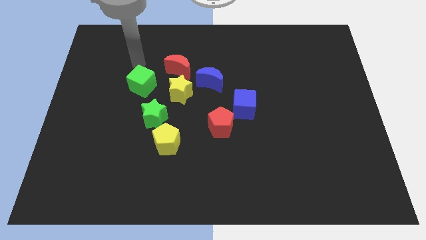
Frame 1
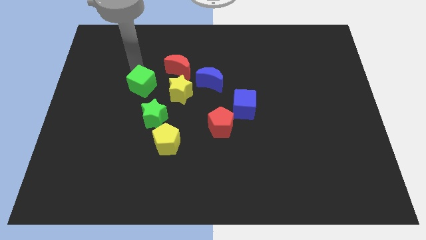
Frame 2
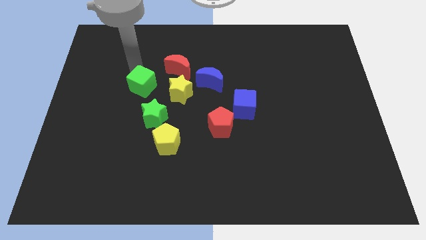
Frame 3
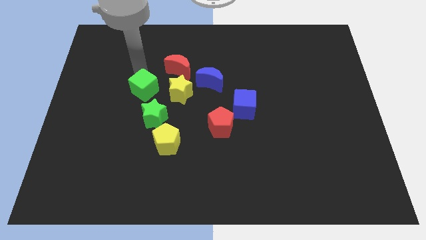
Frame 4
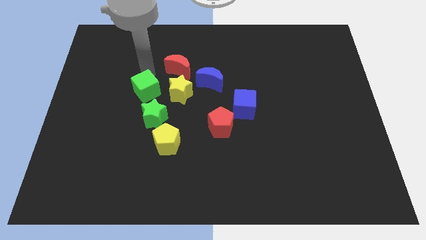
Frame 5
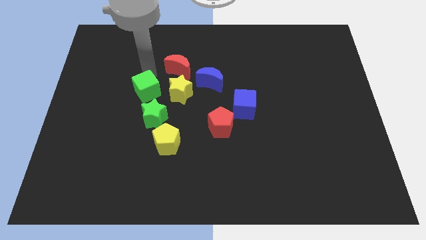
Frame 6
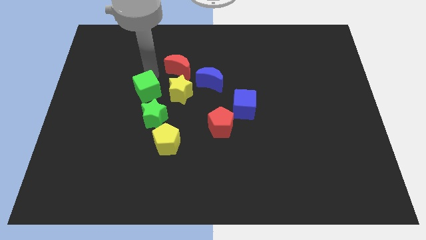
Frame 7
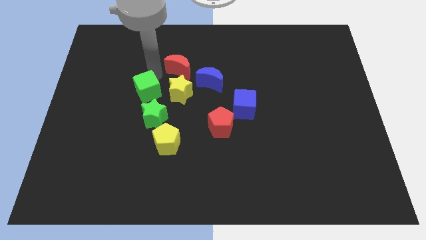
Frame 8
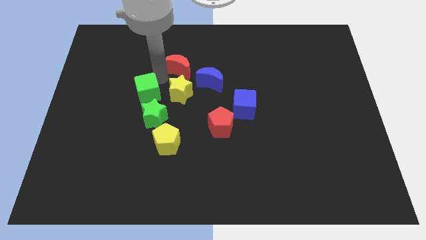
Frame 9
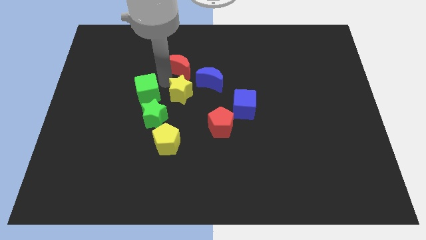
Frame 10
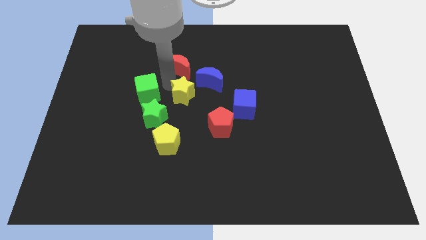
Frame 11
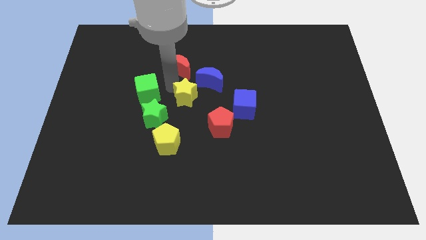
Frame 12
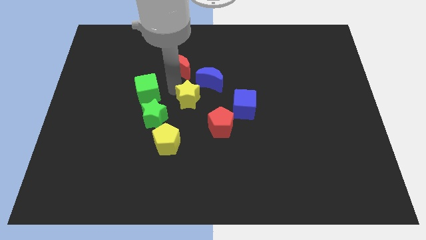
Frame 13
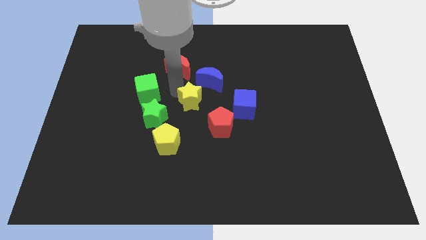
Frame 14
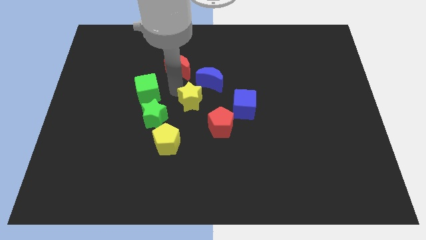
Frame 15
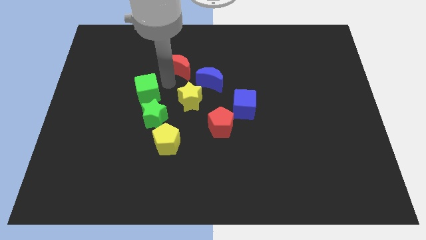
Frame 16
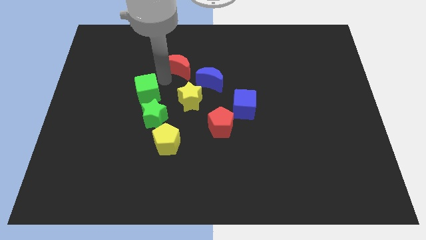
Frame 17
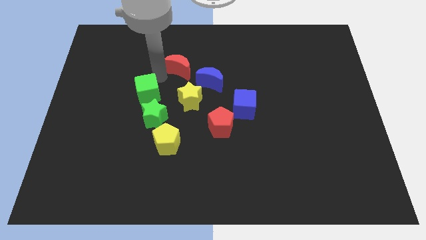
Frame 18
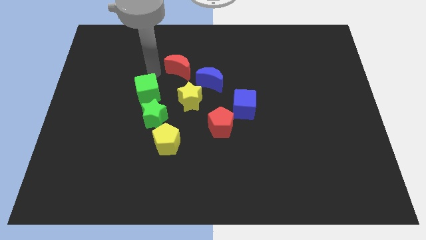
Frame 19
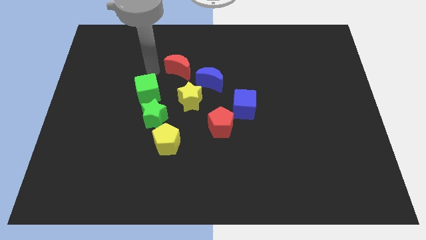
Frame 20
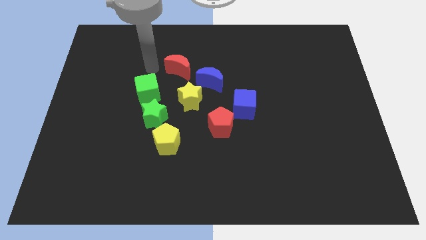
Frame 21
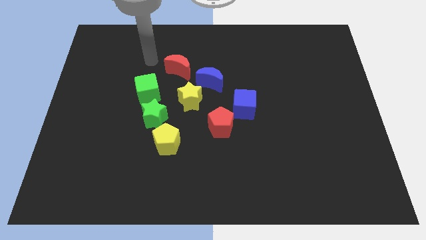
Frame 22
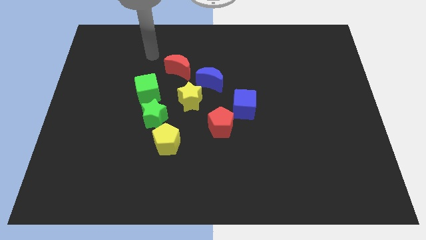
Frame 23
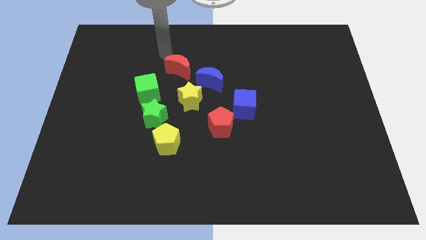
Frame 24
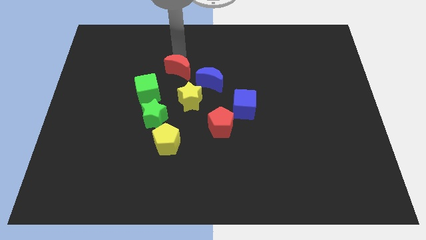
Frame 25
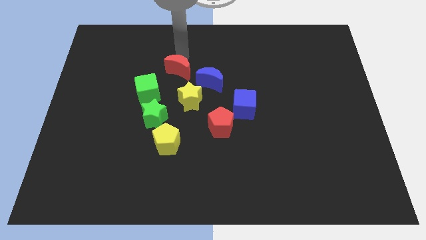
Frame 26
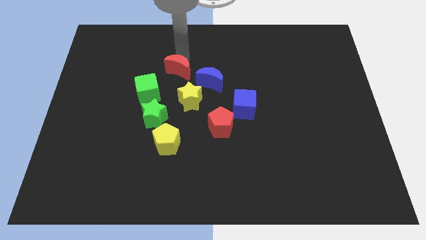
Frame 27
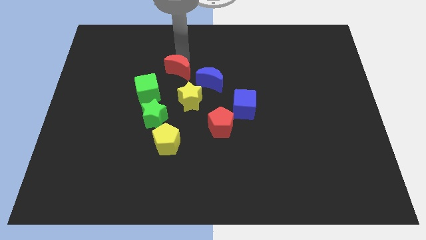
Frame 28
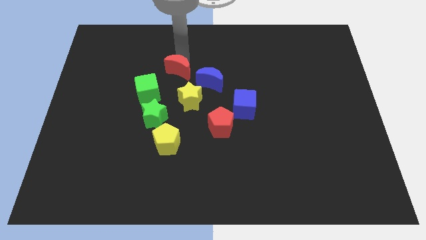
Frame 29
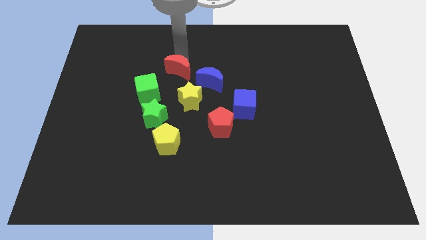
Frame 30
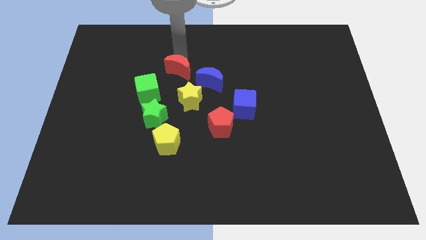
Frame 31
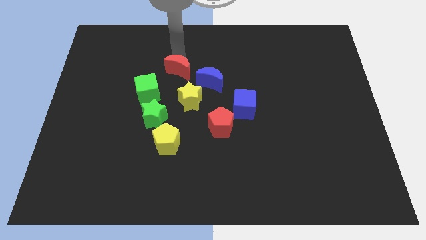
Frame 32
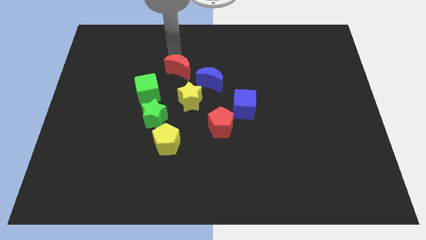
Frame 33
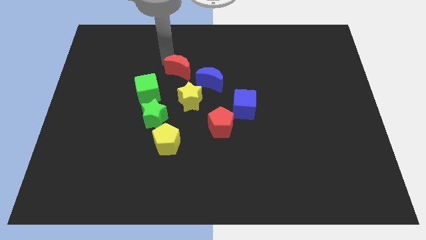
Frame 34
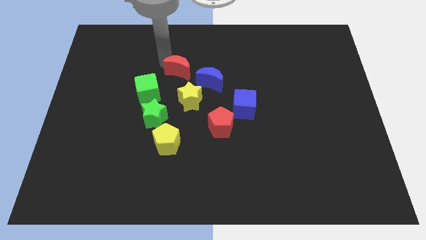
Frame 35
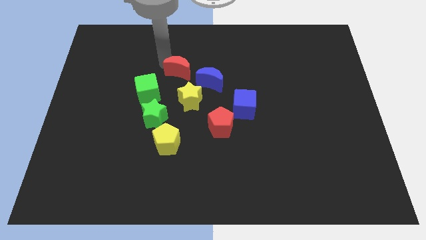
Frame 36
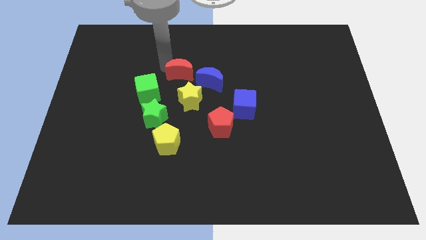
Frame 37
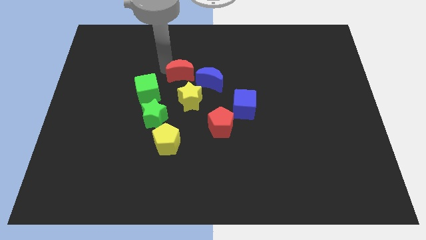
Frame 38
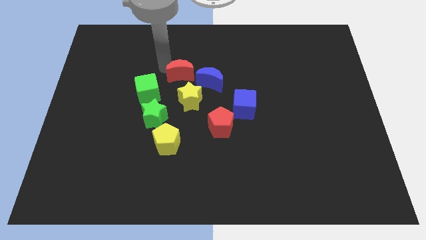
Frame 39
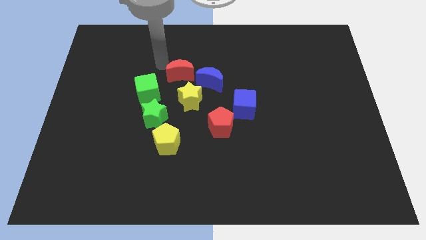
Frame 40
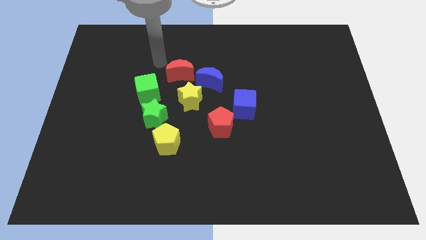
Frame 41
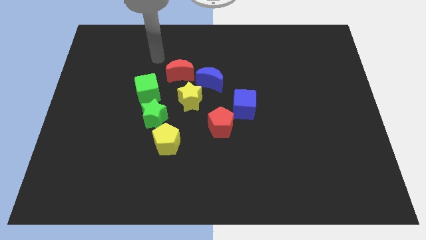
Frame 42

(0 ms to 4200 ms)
slide green cube yellow star and red moon towards center to make a triangle

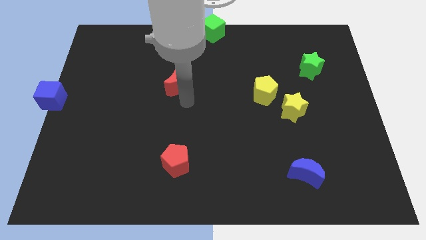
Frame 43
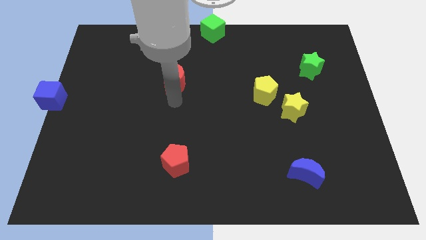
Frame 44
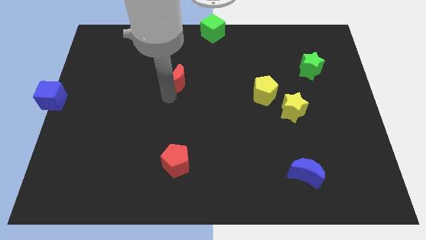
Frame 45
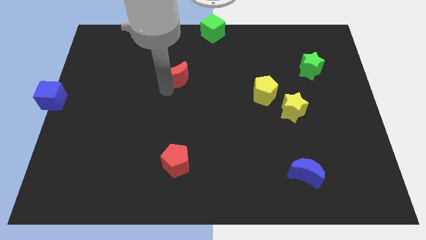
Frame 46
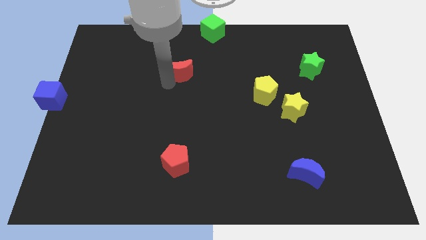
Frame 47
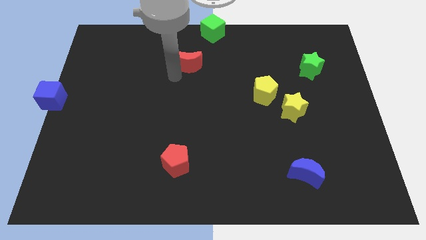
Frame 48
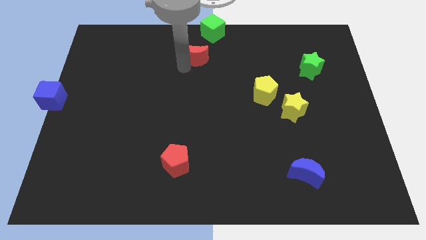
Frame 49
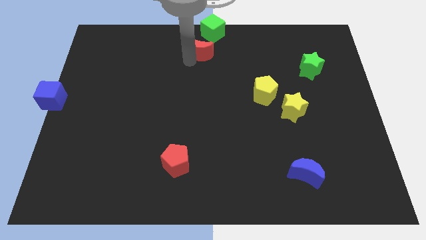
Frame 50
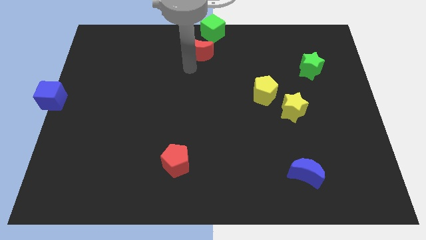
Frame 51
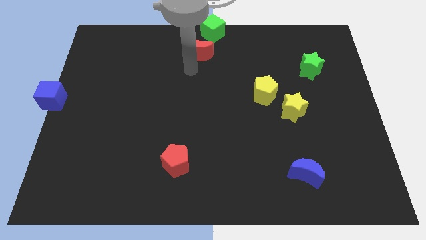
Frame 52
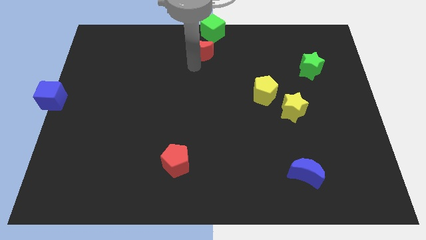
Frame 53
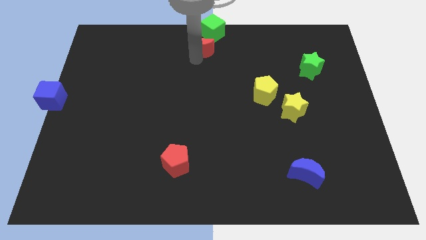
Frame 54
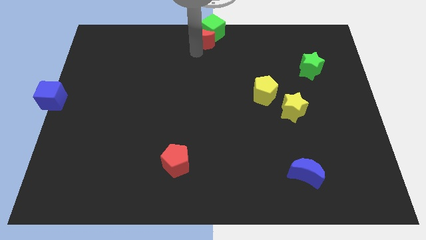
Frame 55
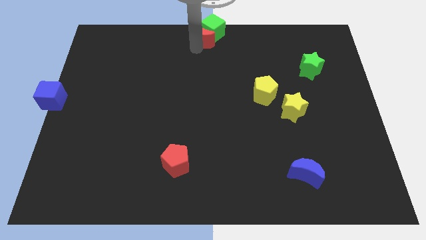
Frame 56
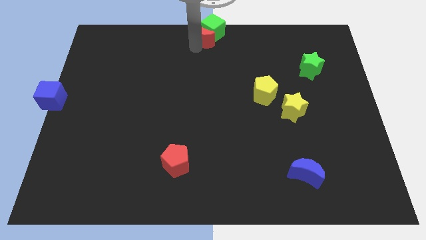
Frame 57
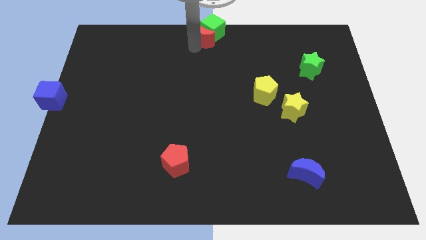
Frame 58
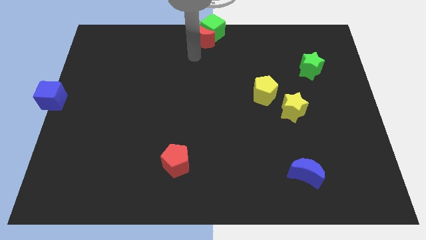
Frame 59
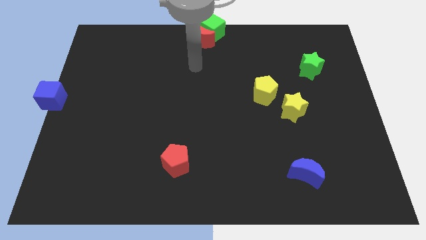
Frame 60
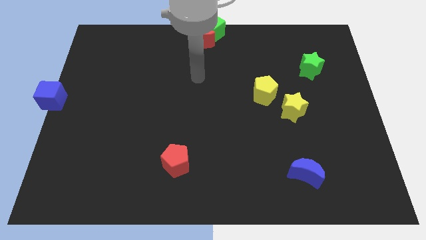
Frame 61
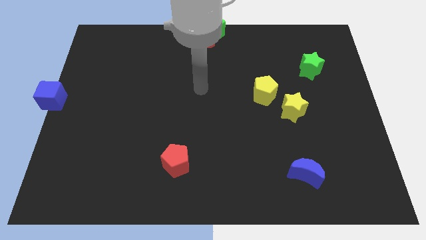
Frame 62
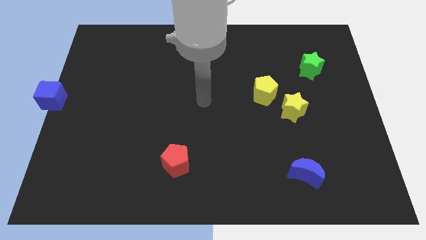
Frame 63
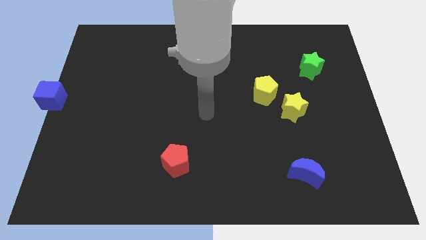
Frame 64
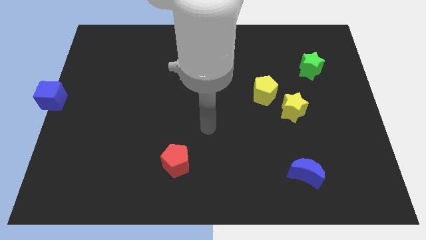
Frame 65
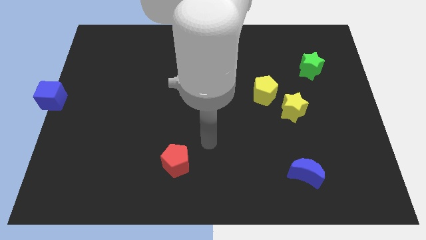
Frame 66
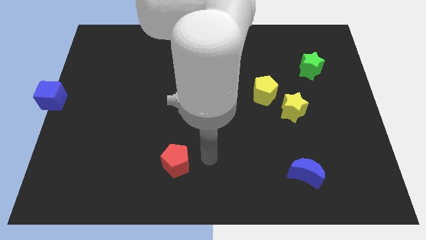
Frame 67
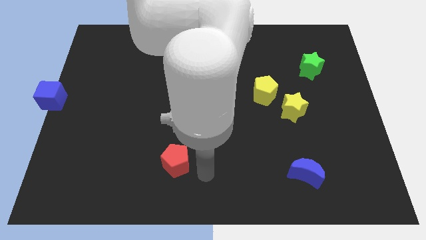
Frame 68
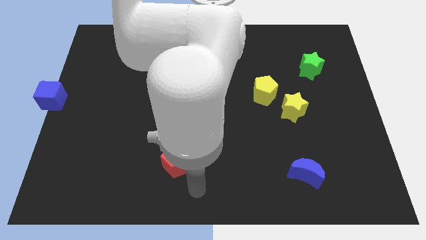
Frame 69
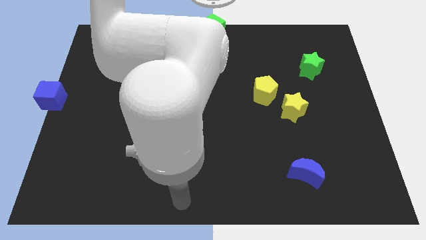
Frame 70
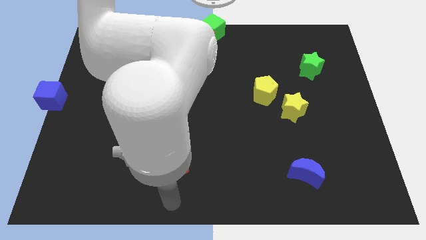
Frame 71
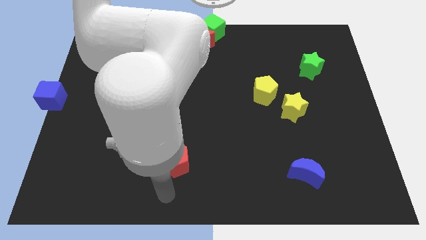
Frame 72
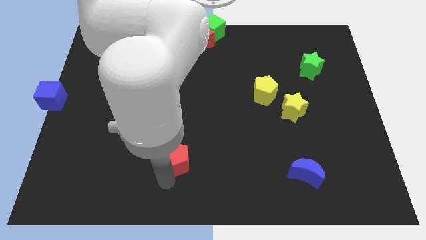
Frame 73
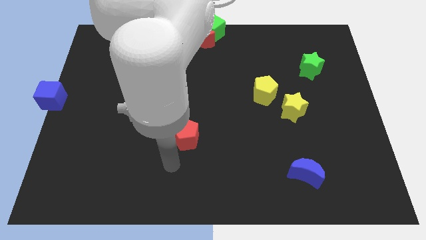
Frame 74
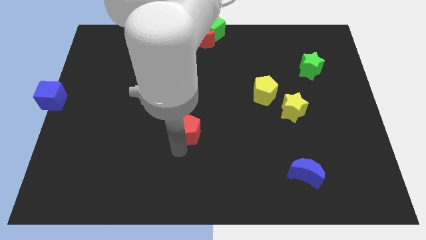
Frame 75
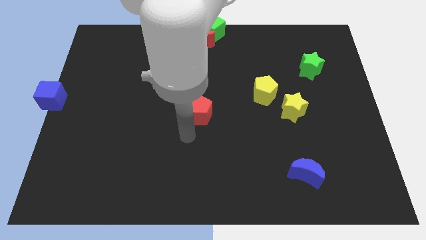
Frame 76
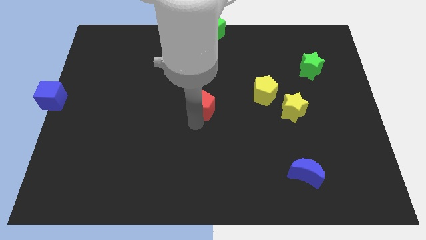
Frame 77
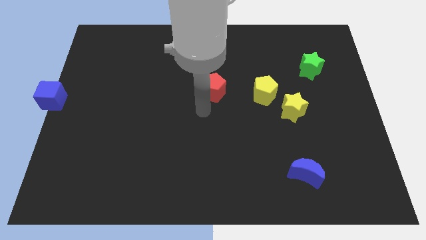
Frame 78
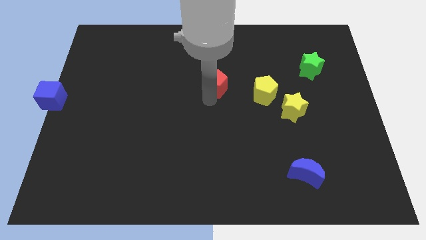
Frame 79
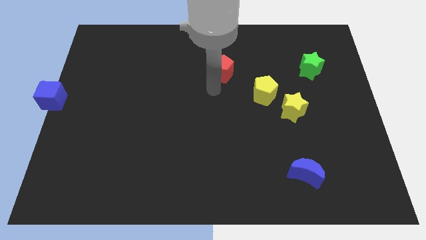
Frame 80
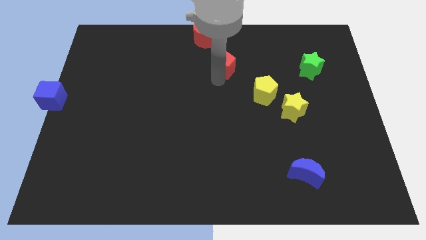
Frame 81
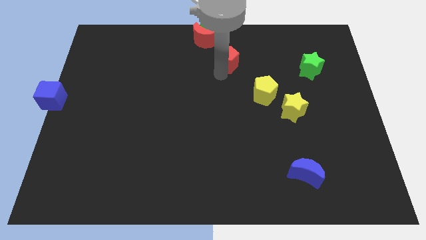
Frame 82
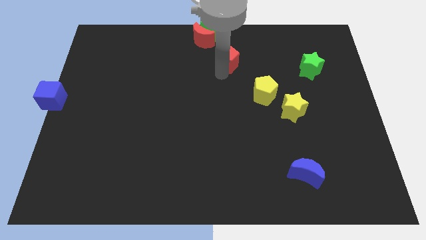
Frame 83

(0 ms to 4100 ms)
move the red moon and red pentagon towards green cube
